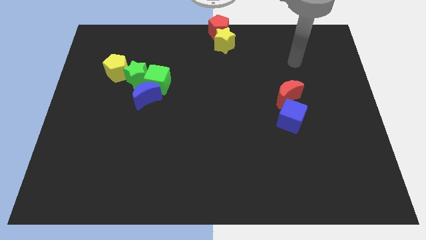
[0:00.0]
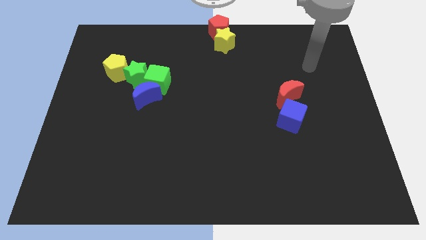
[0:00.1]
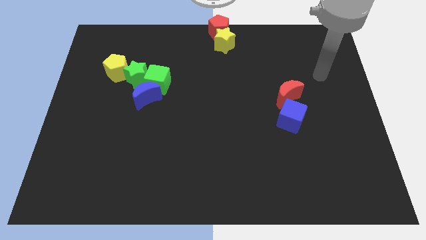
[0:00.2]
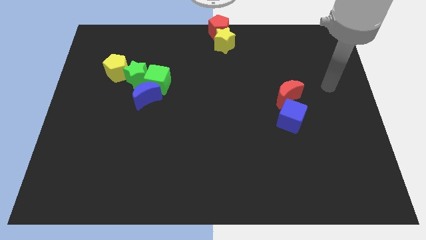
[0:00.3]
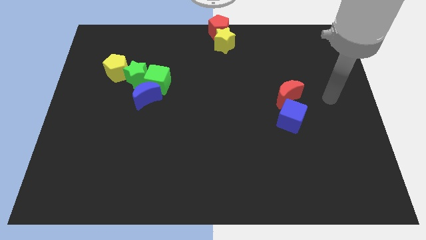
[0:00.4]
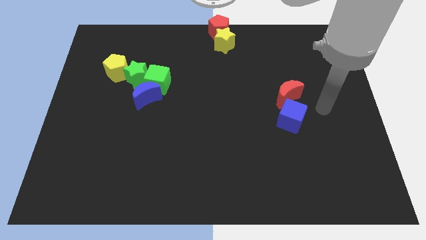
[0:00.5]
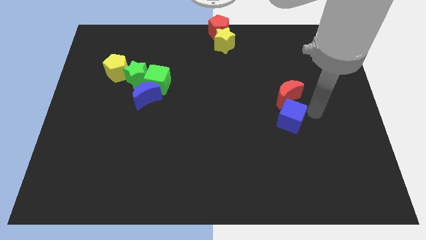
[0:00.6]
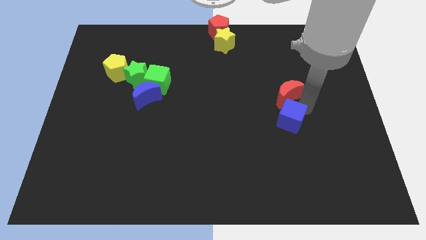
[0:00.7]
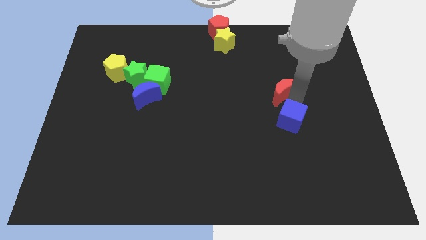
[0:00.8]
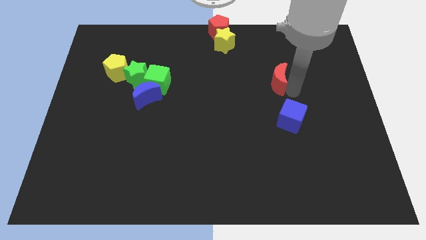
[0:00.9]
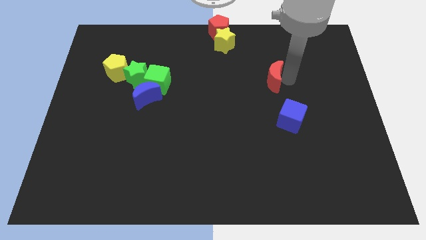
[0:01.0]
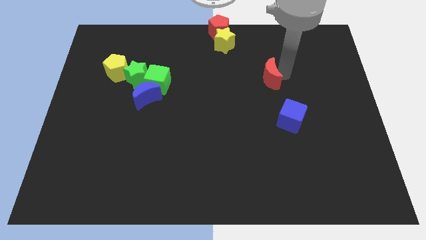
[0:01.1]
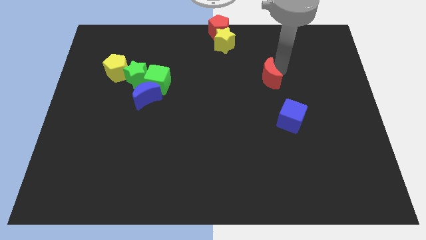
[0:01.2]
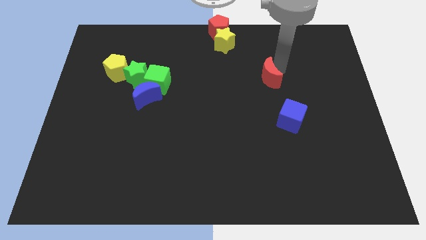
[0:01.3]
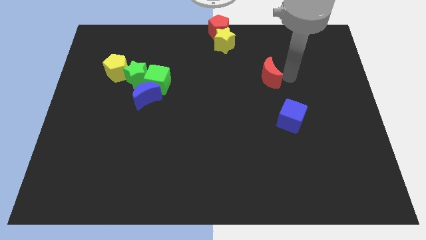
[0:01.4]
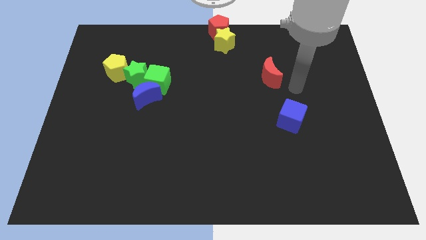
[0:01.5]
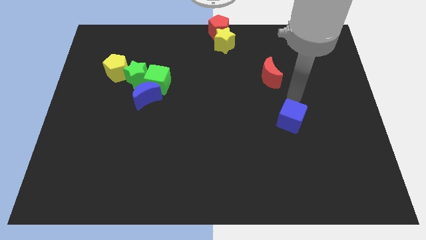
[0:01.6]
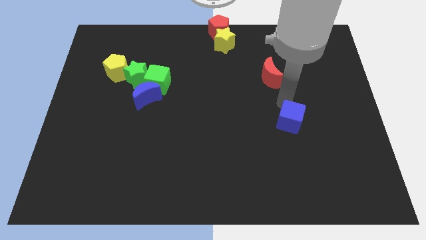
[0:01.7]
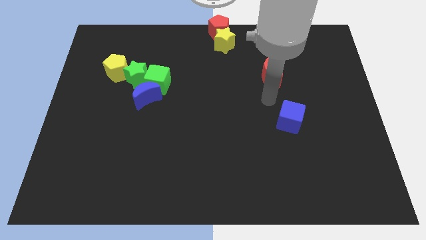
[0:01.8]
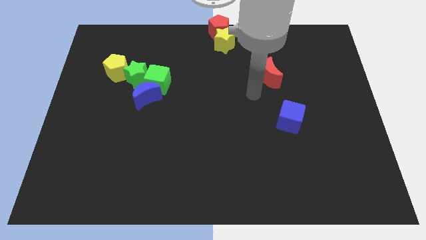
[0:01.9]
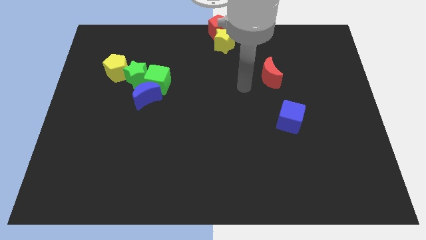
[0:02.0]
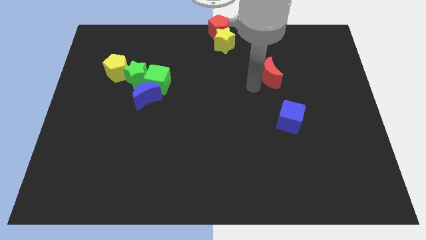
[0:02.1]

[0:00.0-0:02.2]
separate the red moon from the blue cube

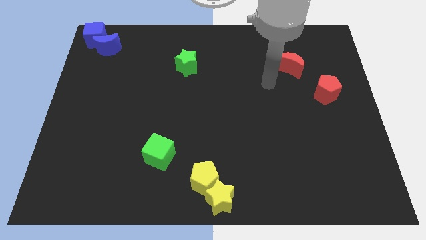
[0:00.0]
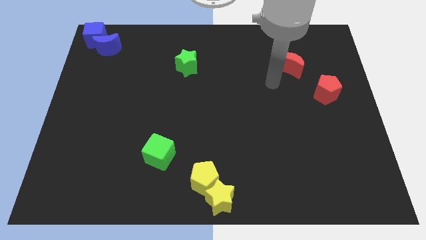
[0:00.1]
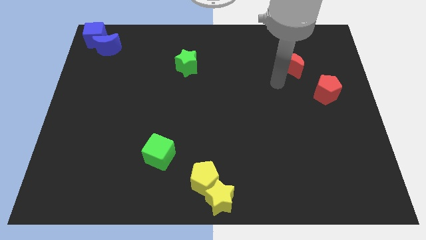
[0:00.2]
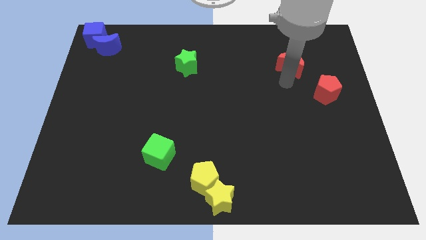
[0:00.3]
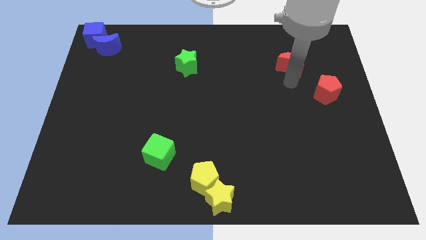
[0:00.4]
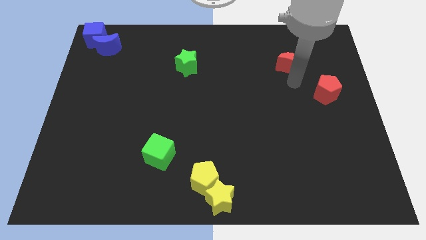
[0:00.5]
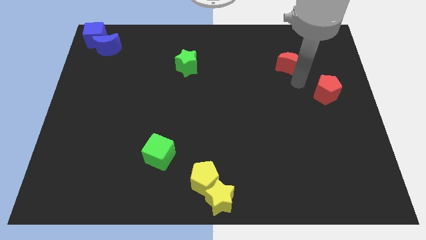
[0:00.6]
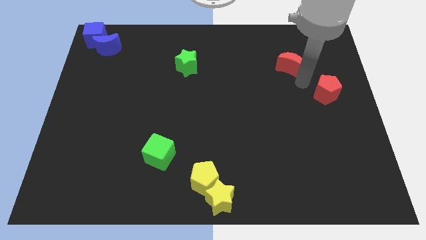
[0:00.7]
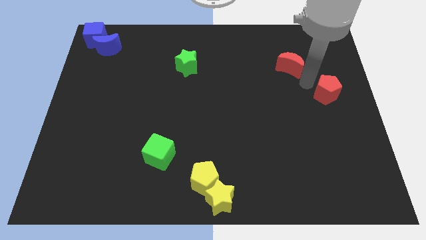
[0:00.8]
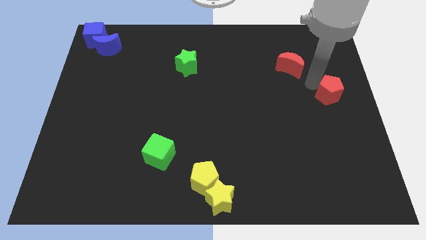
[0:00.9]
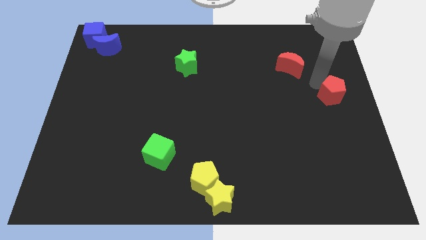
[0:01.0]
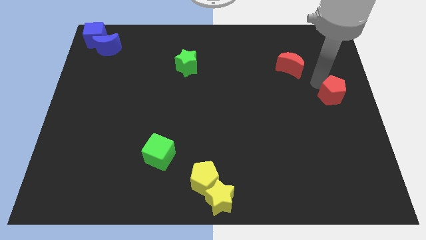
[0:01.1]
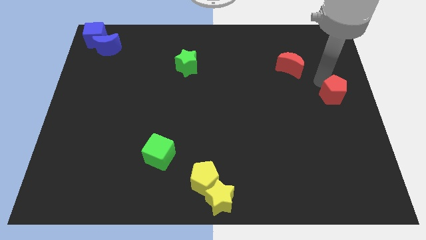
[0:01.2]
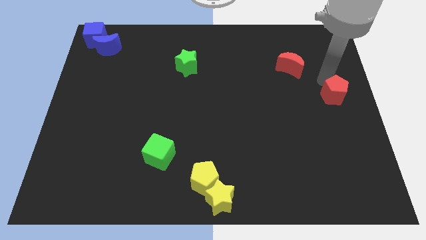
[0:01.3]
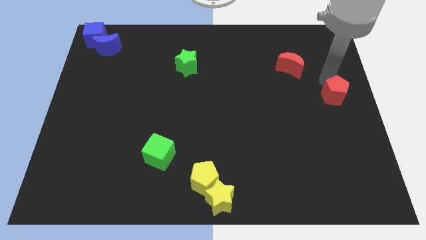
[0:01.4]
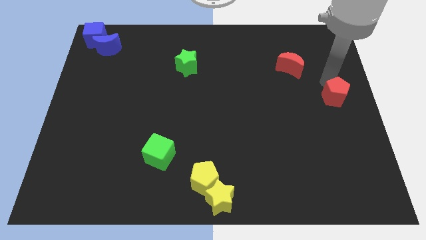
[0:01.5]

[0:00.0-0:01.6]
place your arm near red pentagon

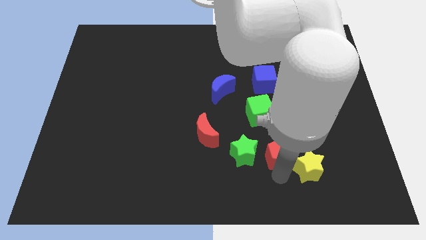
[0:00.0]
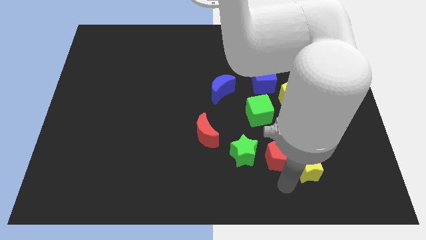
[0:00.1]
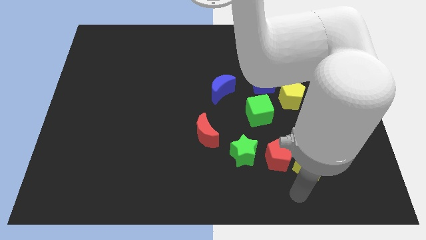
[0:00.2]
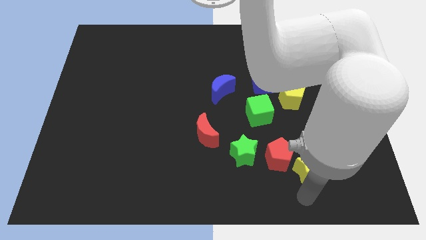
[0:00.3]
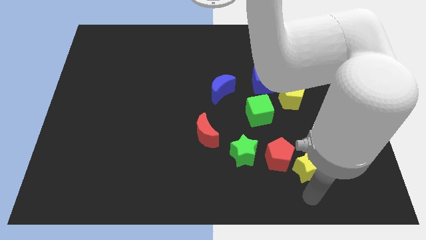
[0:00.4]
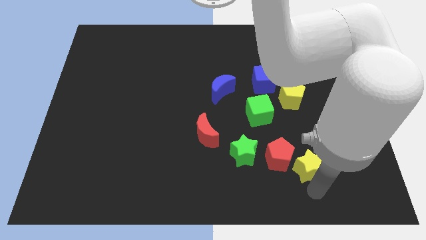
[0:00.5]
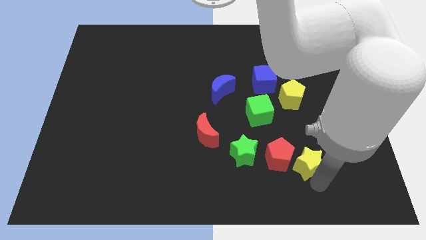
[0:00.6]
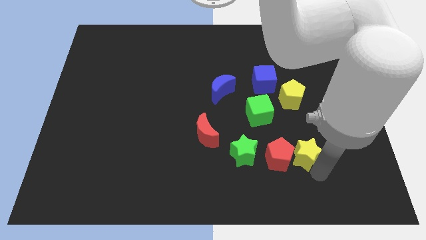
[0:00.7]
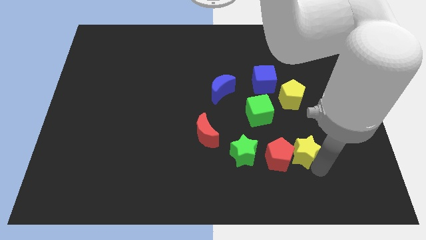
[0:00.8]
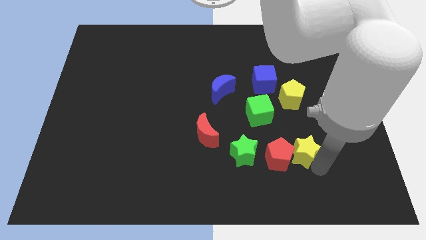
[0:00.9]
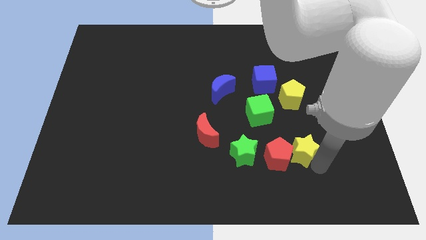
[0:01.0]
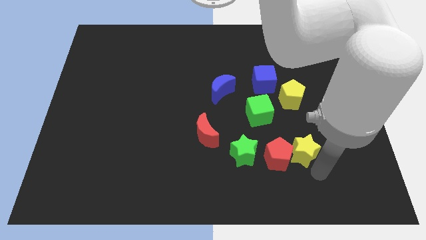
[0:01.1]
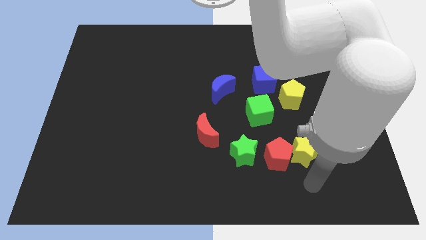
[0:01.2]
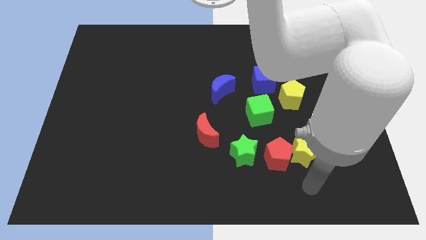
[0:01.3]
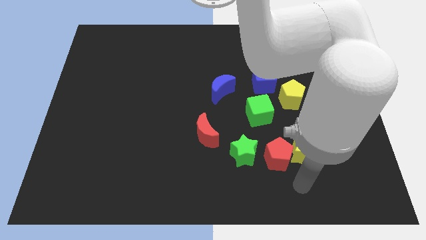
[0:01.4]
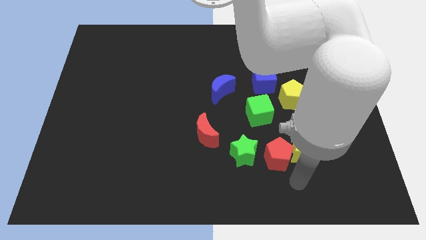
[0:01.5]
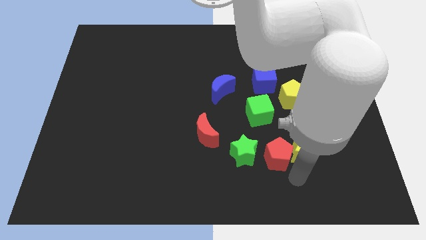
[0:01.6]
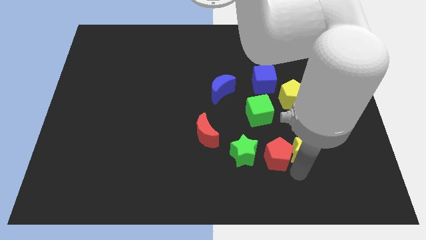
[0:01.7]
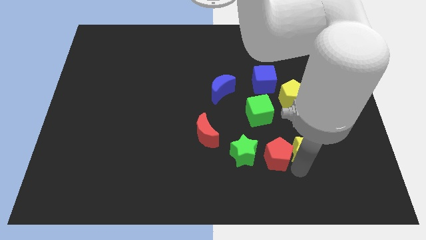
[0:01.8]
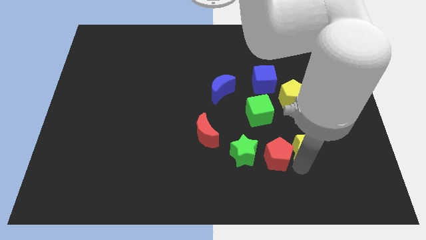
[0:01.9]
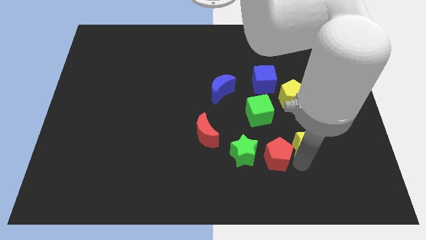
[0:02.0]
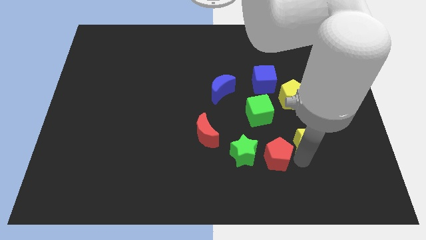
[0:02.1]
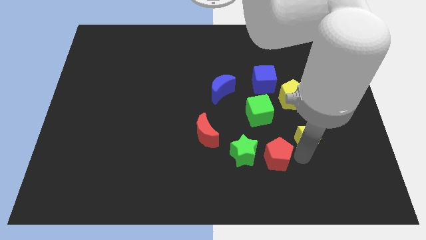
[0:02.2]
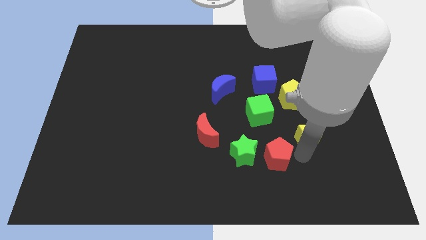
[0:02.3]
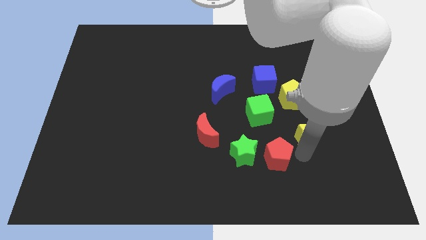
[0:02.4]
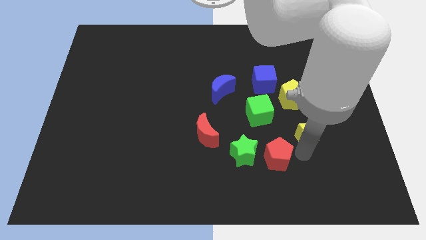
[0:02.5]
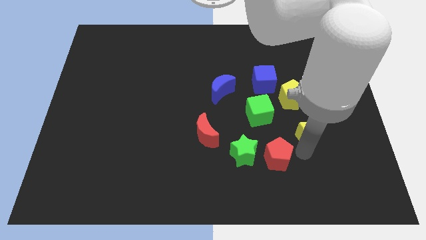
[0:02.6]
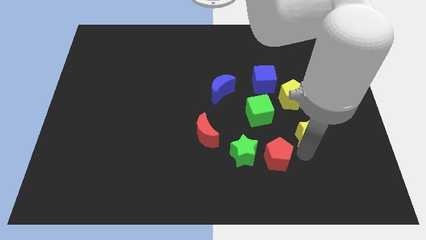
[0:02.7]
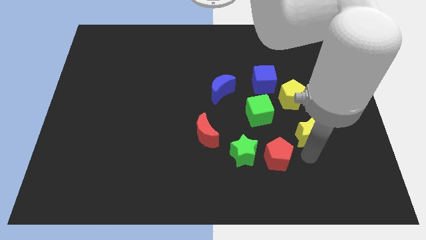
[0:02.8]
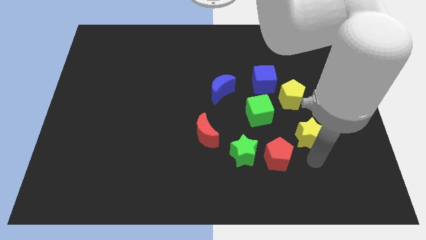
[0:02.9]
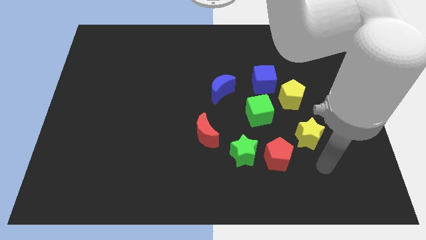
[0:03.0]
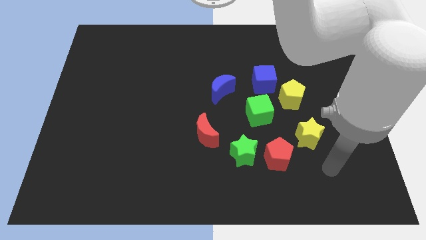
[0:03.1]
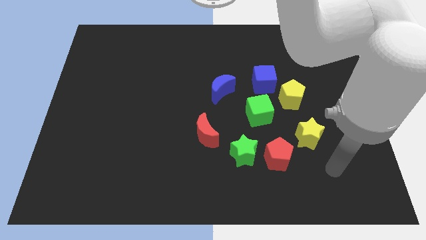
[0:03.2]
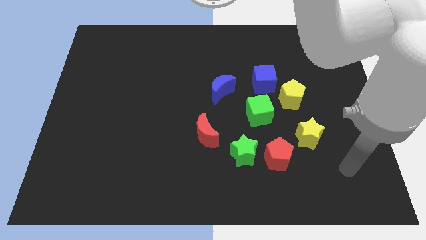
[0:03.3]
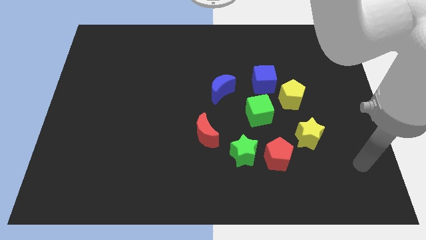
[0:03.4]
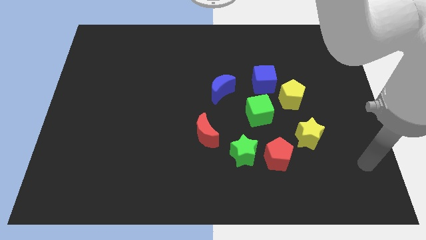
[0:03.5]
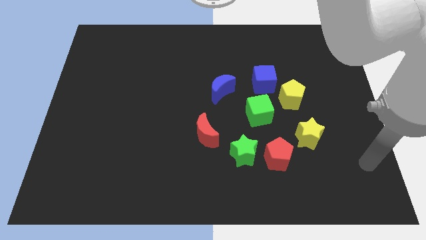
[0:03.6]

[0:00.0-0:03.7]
move the yellow star upwards slightly

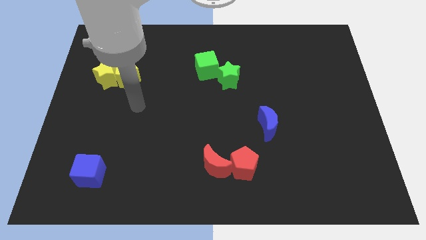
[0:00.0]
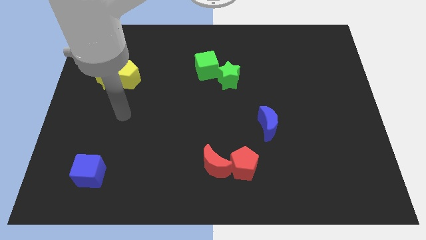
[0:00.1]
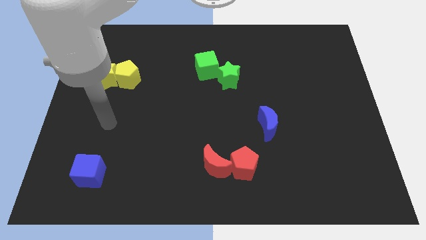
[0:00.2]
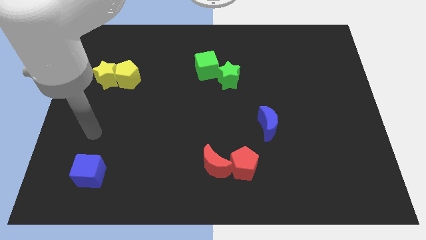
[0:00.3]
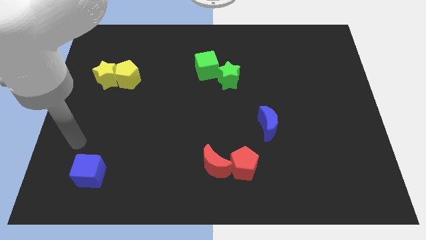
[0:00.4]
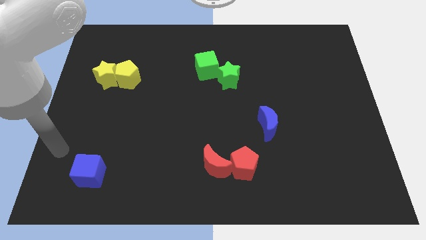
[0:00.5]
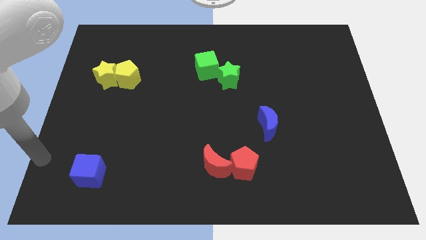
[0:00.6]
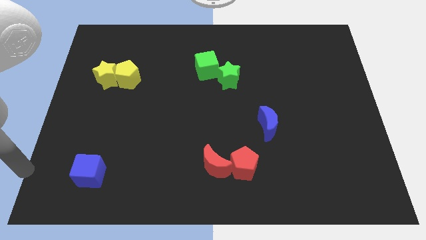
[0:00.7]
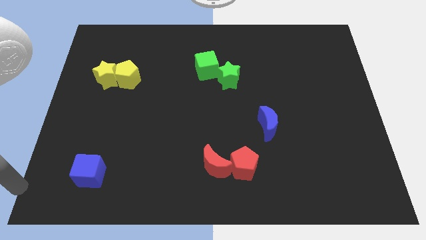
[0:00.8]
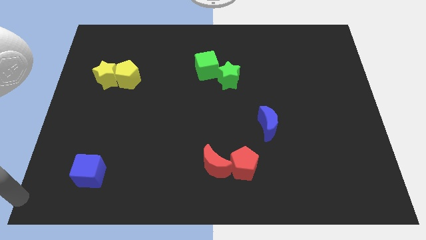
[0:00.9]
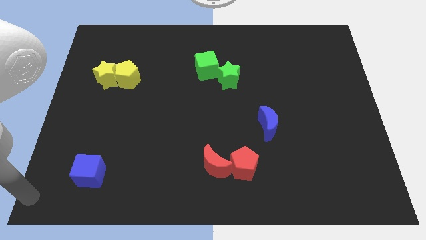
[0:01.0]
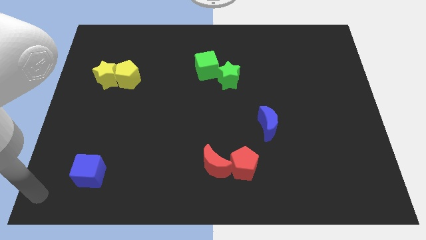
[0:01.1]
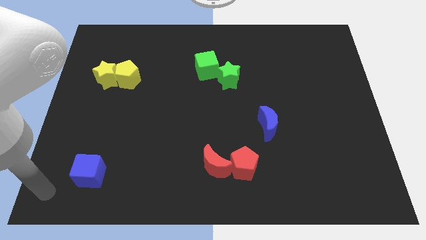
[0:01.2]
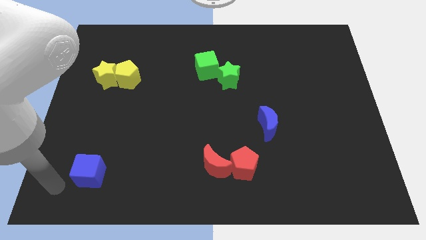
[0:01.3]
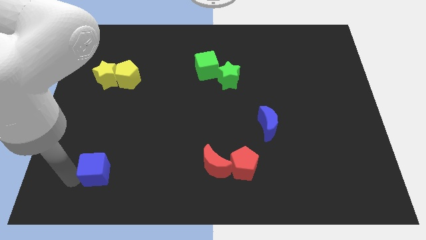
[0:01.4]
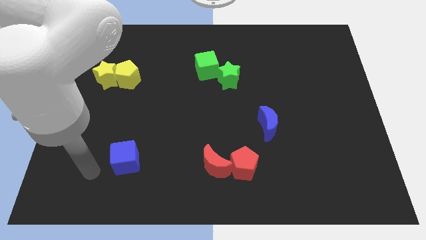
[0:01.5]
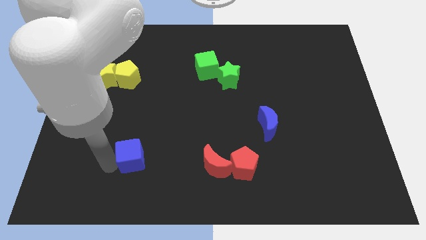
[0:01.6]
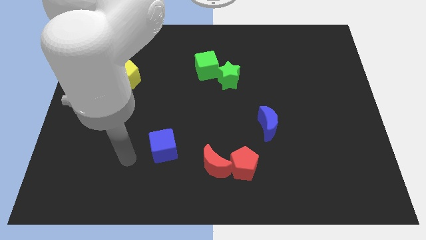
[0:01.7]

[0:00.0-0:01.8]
push blue cube
